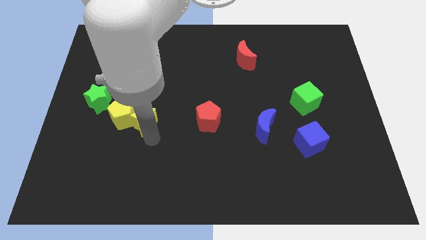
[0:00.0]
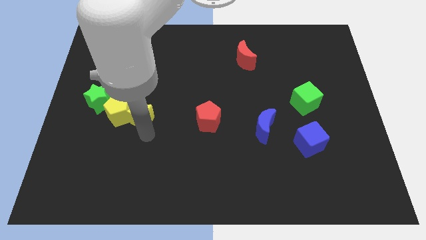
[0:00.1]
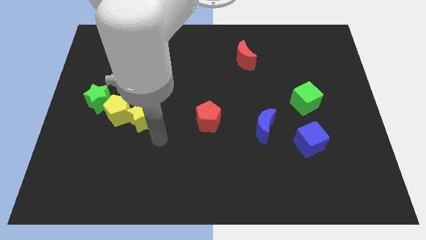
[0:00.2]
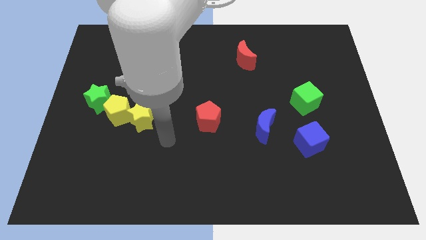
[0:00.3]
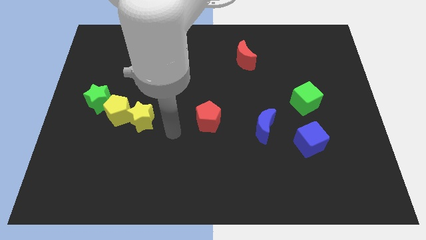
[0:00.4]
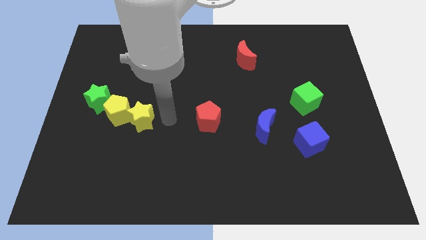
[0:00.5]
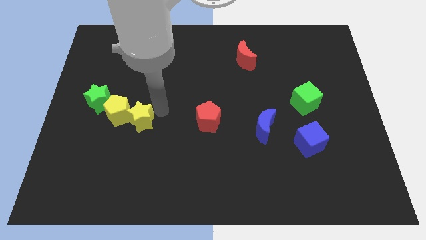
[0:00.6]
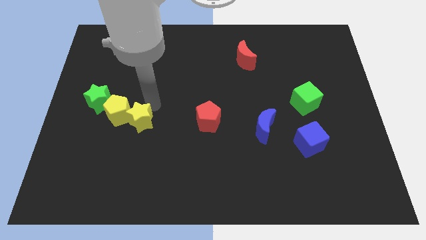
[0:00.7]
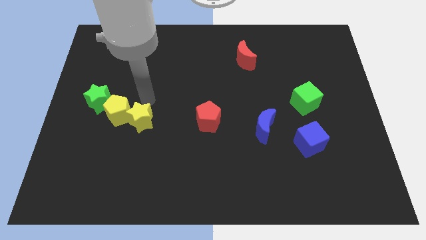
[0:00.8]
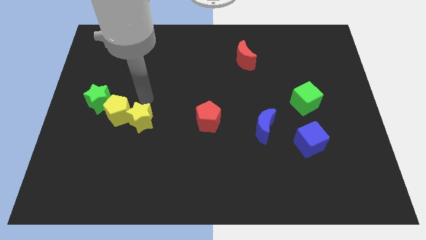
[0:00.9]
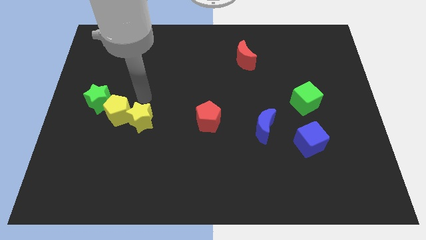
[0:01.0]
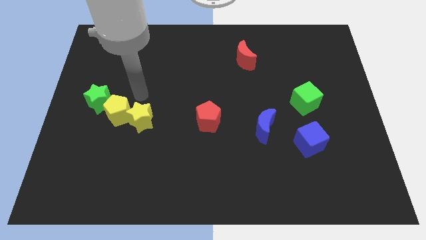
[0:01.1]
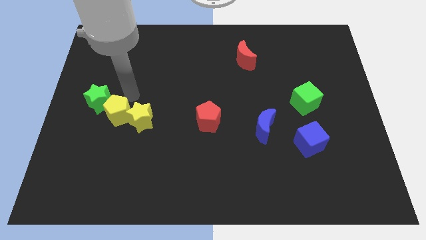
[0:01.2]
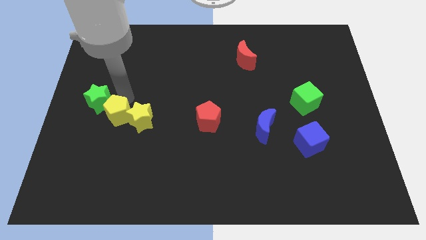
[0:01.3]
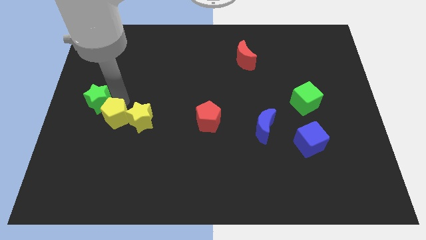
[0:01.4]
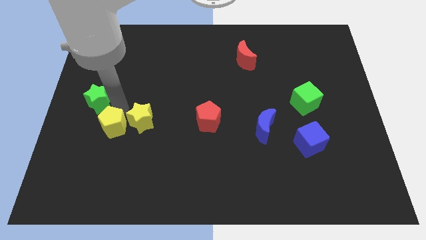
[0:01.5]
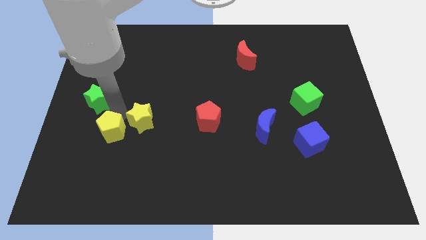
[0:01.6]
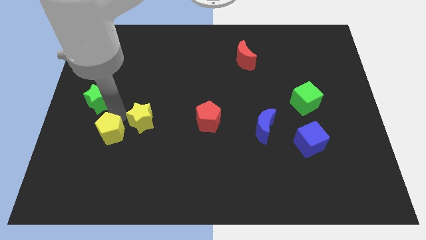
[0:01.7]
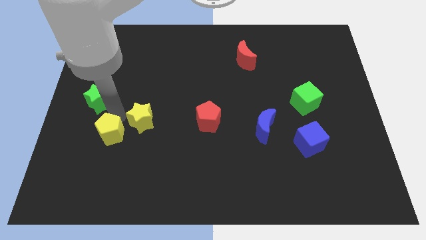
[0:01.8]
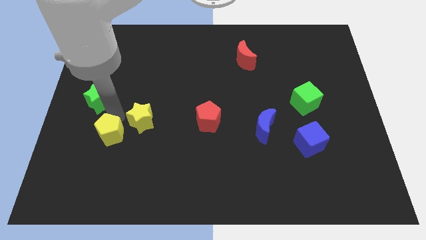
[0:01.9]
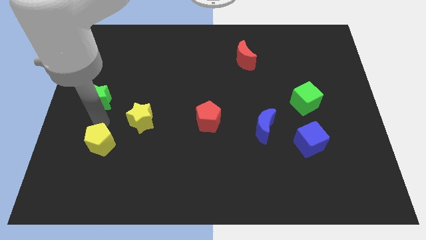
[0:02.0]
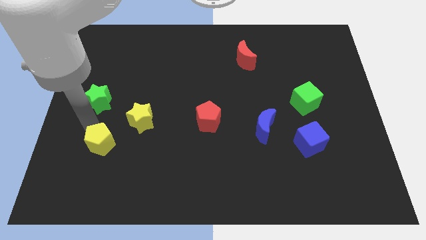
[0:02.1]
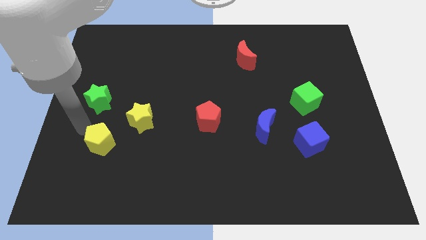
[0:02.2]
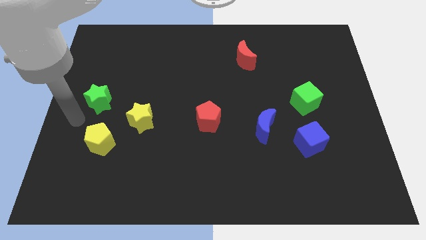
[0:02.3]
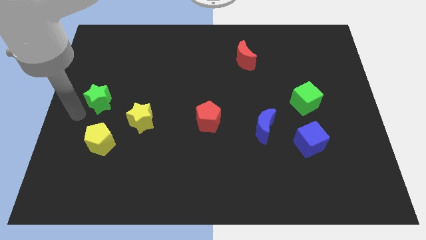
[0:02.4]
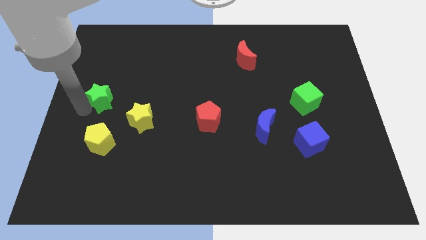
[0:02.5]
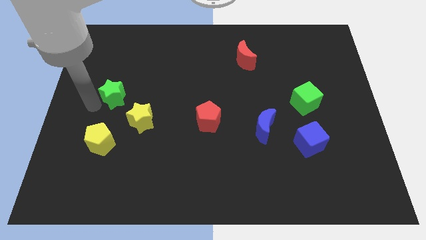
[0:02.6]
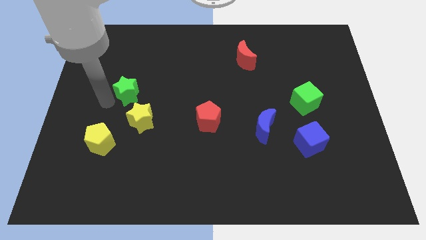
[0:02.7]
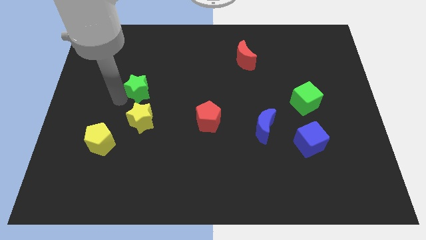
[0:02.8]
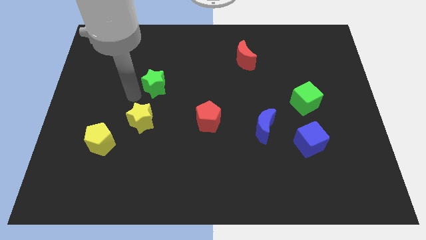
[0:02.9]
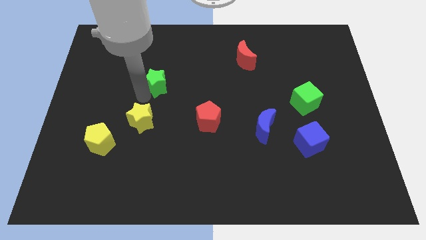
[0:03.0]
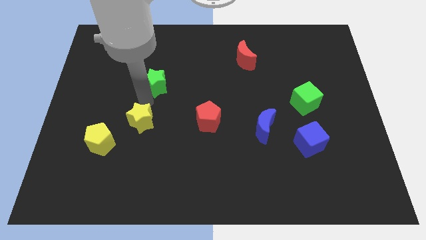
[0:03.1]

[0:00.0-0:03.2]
slide the yellow pentagon and green star diagonal to each other

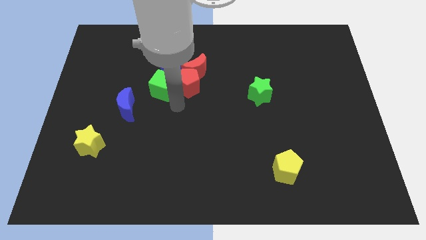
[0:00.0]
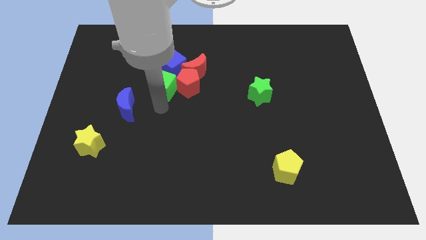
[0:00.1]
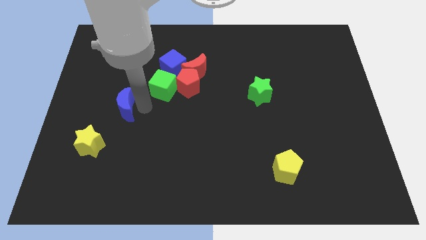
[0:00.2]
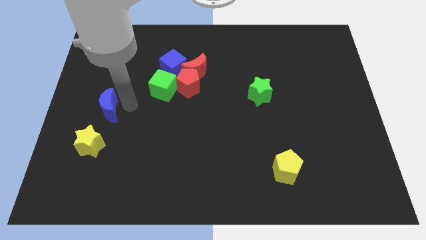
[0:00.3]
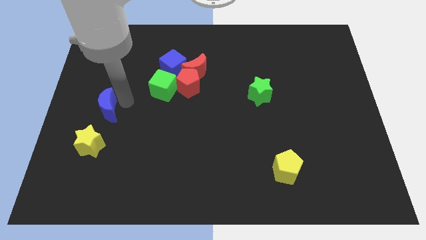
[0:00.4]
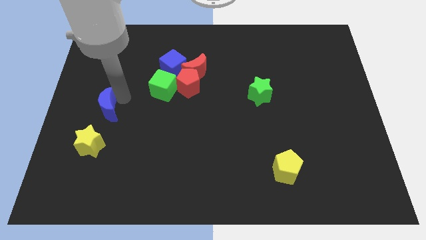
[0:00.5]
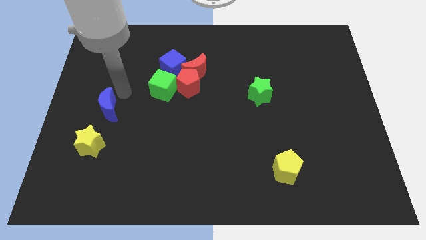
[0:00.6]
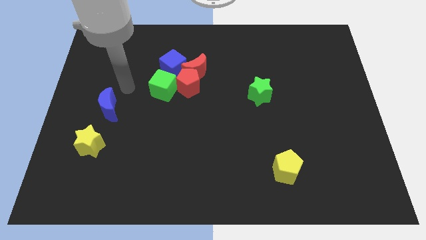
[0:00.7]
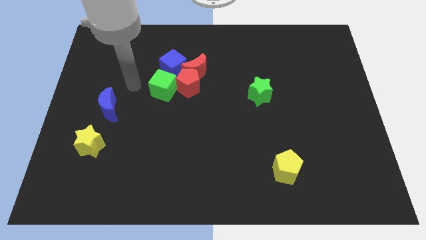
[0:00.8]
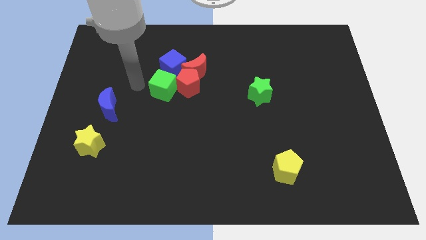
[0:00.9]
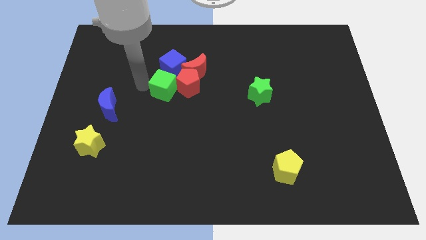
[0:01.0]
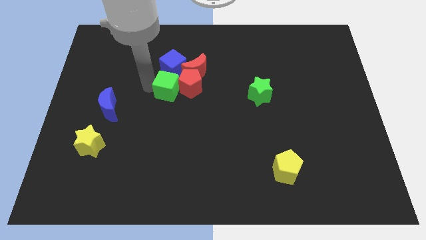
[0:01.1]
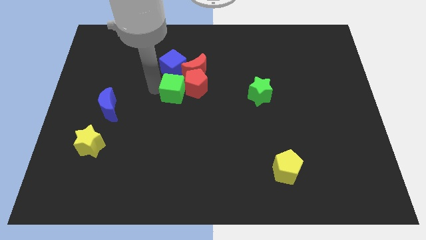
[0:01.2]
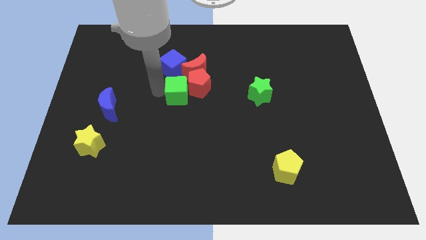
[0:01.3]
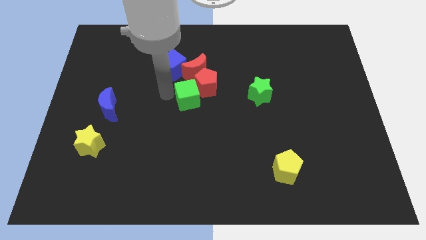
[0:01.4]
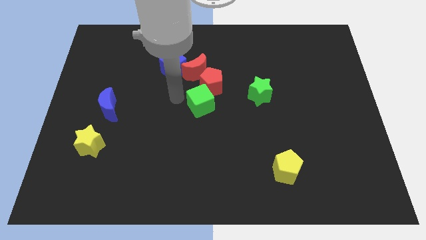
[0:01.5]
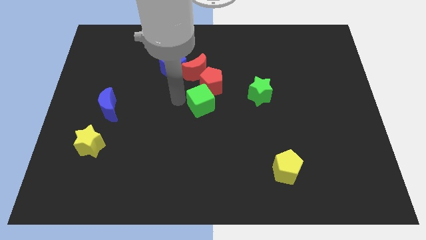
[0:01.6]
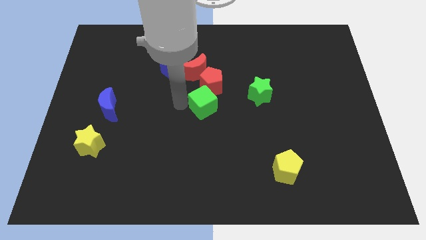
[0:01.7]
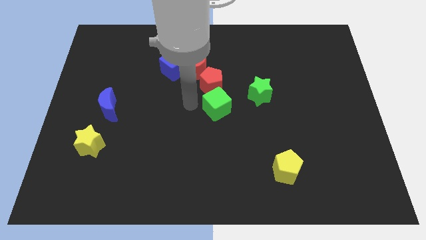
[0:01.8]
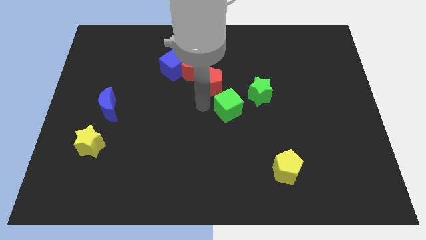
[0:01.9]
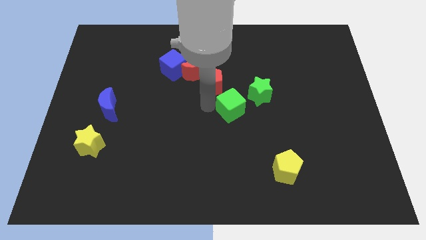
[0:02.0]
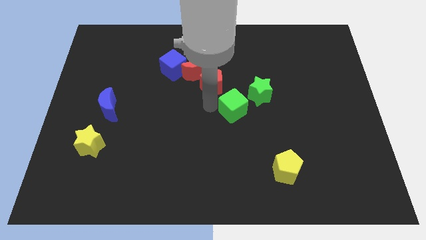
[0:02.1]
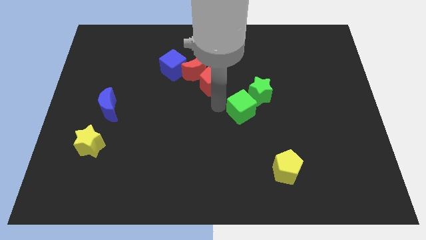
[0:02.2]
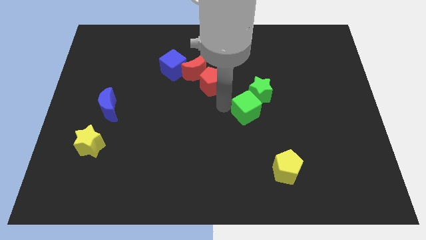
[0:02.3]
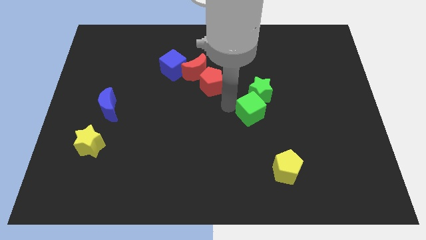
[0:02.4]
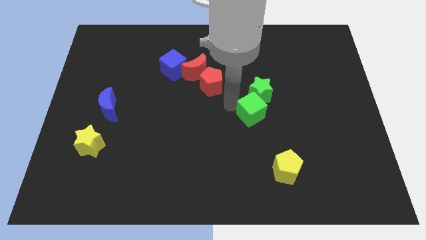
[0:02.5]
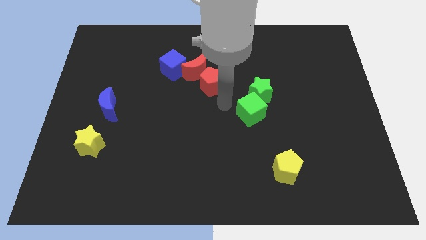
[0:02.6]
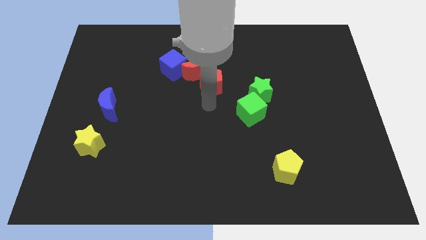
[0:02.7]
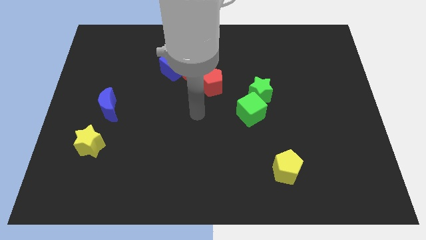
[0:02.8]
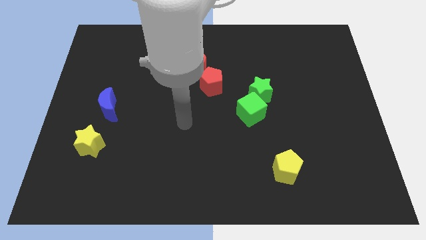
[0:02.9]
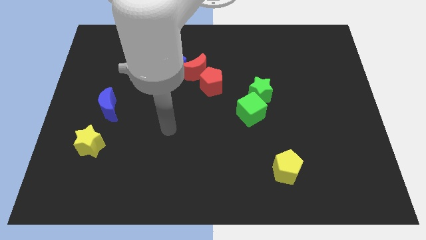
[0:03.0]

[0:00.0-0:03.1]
move the green cube into the bottom side of the green star

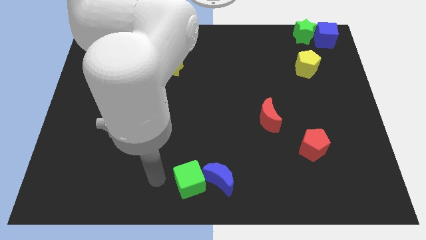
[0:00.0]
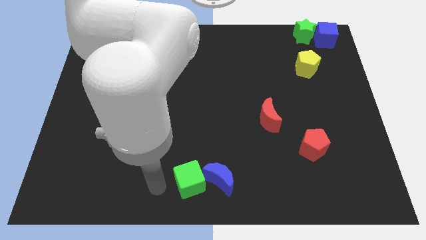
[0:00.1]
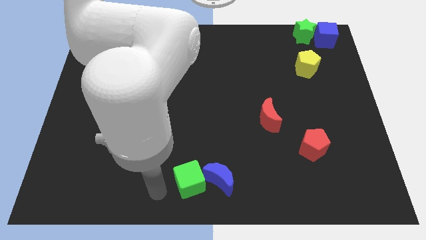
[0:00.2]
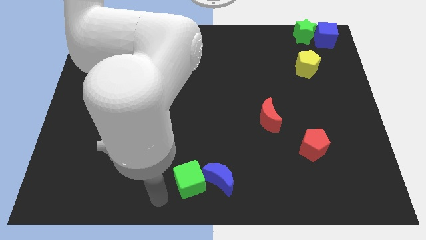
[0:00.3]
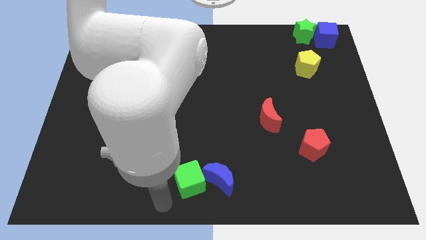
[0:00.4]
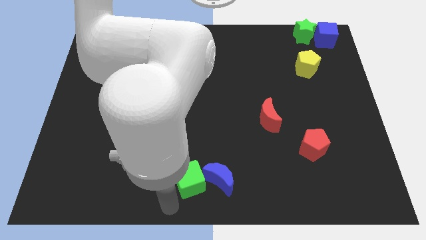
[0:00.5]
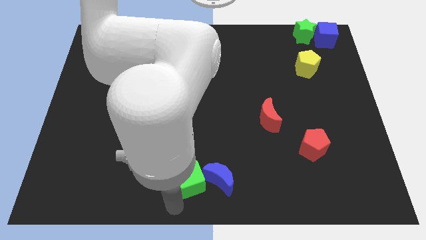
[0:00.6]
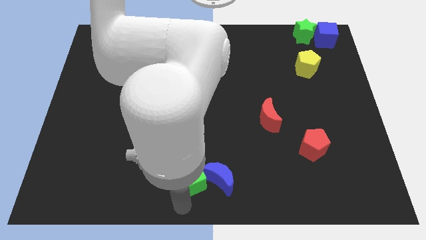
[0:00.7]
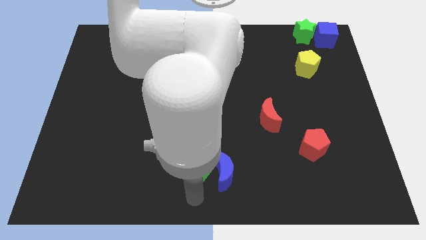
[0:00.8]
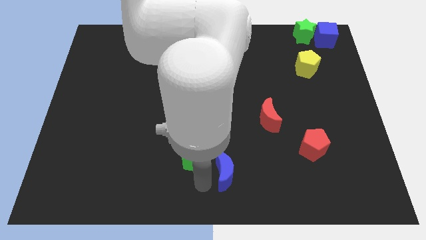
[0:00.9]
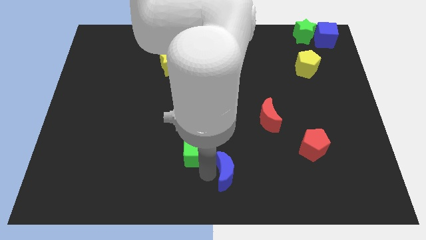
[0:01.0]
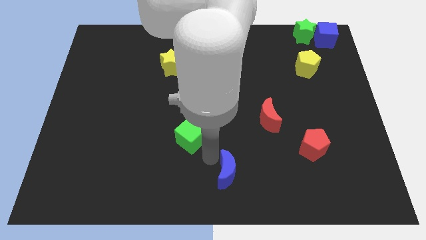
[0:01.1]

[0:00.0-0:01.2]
separate the green cube from the blue moon

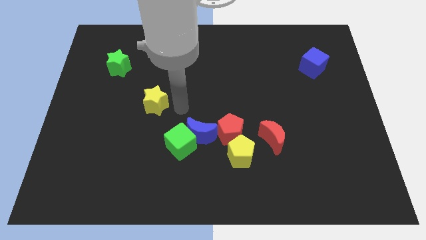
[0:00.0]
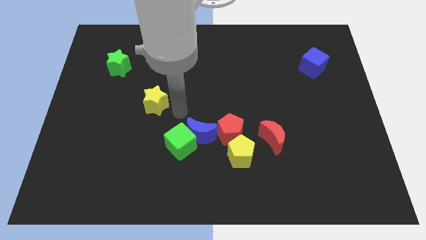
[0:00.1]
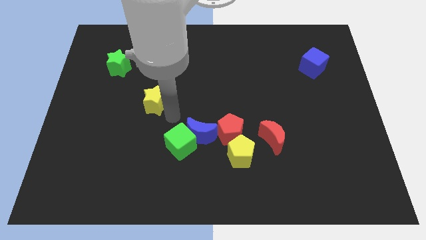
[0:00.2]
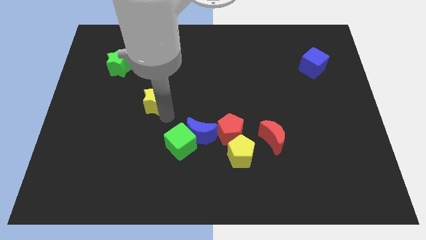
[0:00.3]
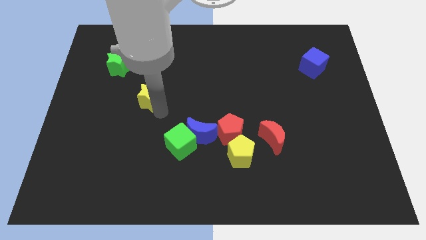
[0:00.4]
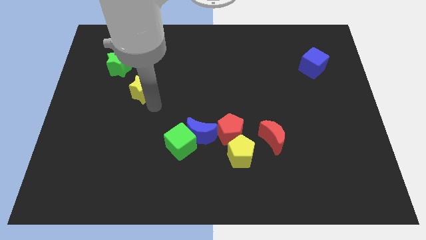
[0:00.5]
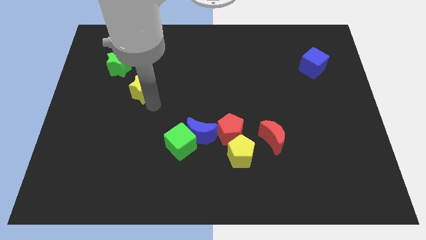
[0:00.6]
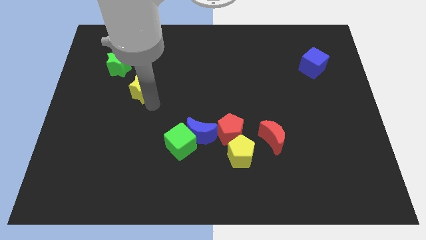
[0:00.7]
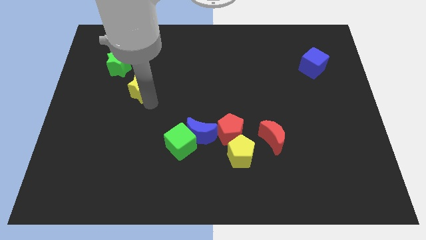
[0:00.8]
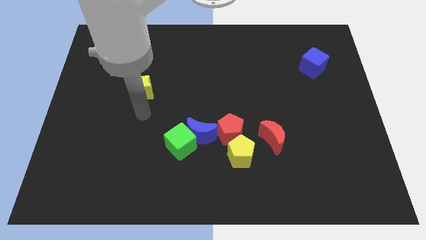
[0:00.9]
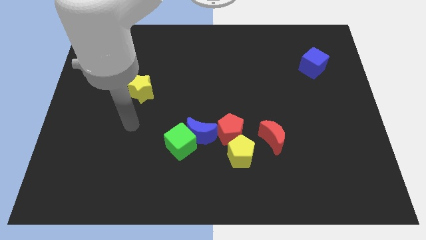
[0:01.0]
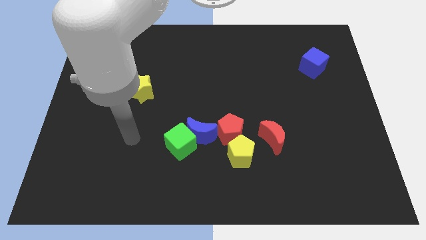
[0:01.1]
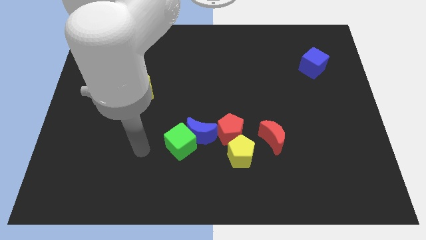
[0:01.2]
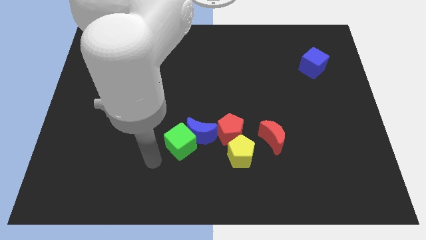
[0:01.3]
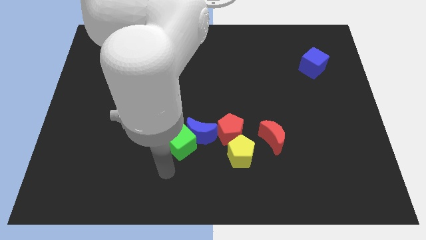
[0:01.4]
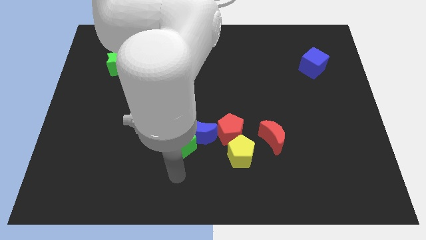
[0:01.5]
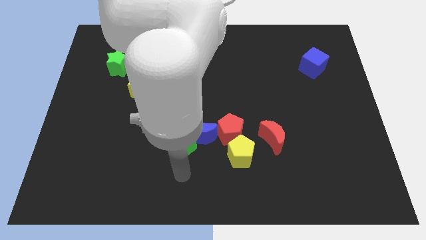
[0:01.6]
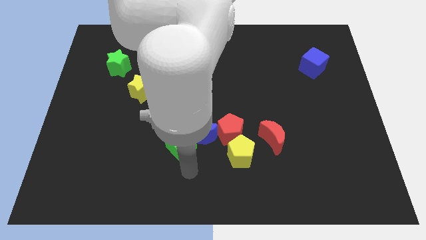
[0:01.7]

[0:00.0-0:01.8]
place the yellow star below to green star
